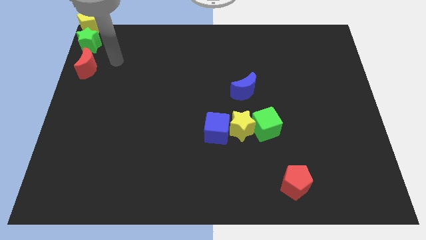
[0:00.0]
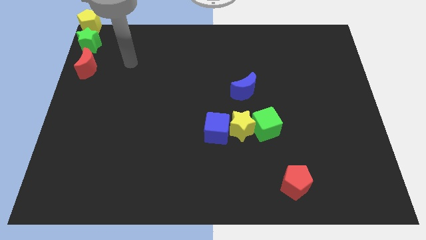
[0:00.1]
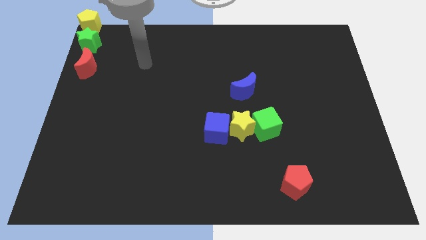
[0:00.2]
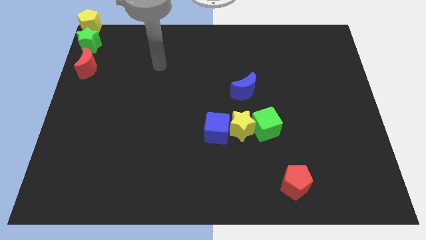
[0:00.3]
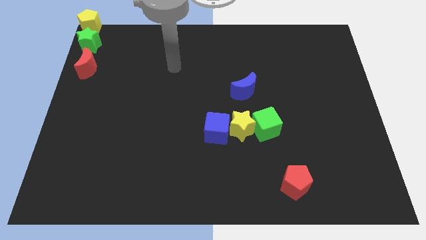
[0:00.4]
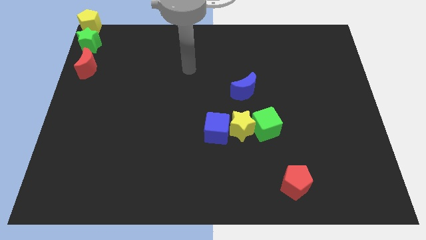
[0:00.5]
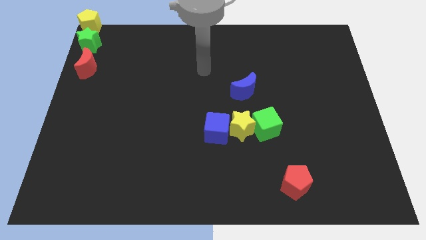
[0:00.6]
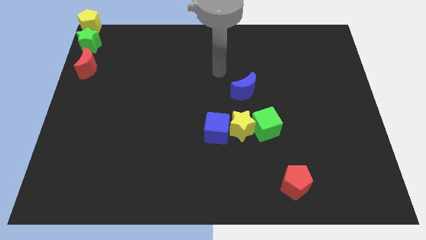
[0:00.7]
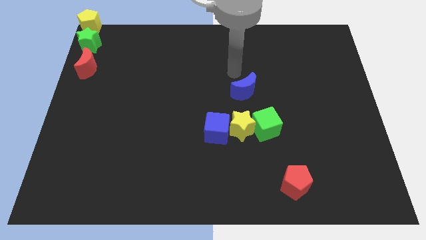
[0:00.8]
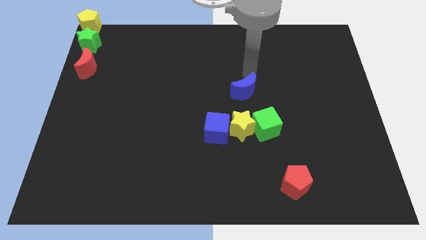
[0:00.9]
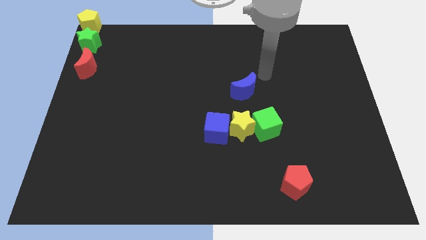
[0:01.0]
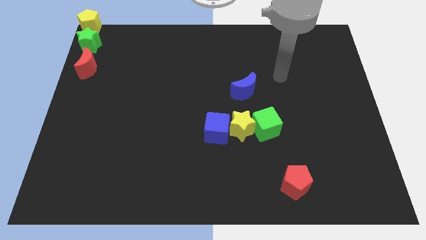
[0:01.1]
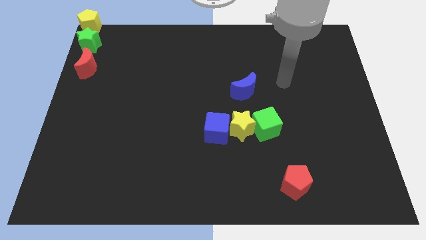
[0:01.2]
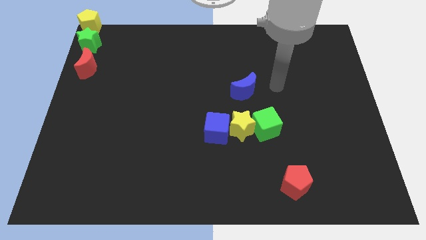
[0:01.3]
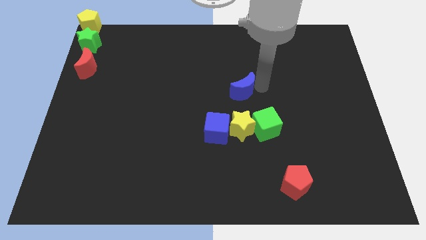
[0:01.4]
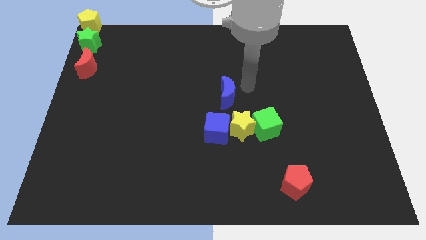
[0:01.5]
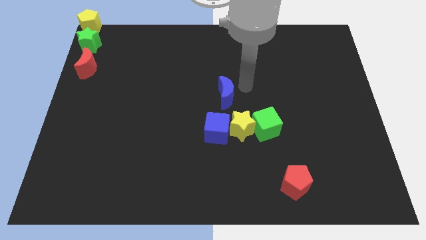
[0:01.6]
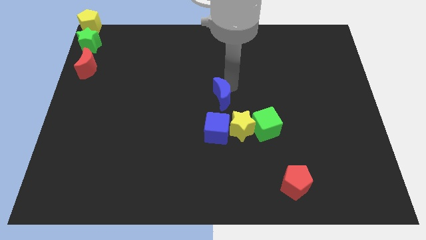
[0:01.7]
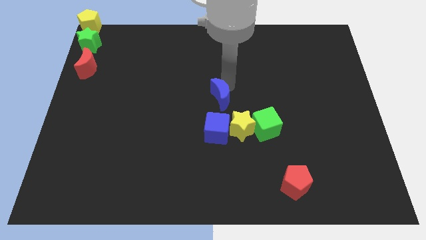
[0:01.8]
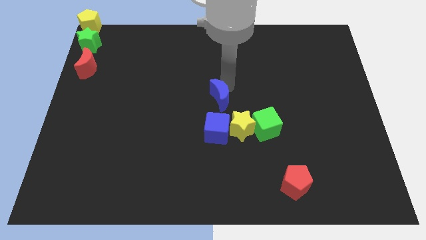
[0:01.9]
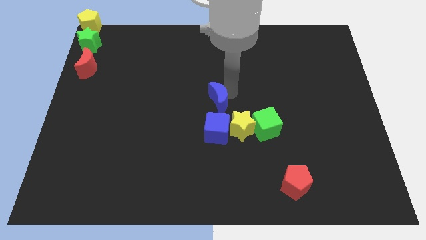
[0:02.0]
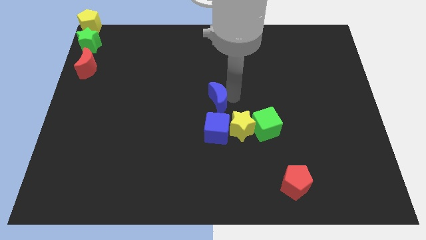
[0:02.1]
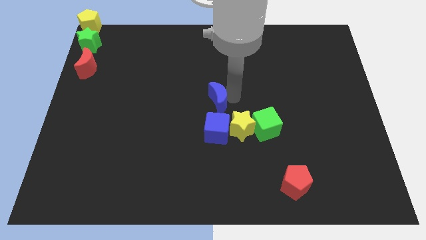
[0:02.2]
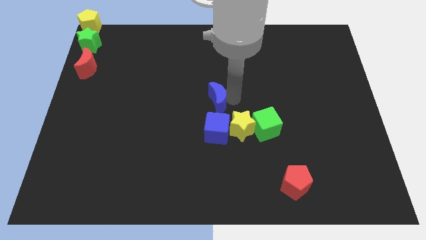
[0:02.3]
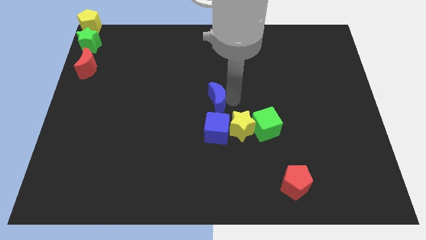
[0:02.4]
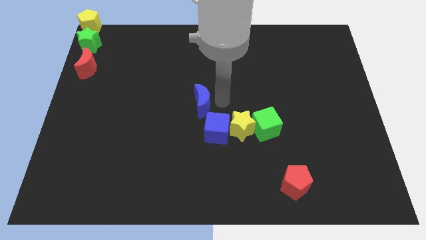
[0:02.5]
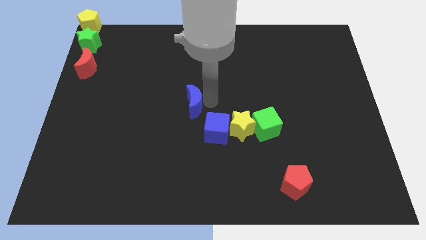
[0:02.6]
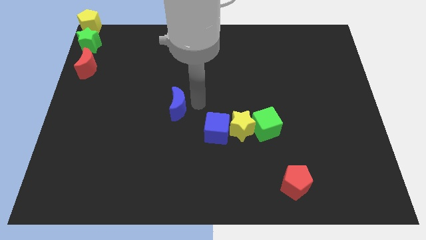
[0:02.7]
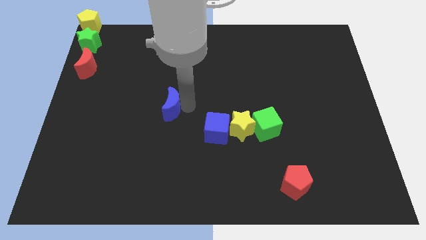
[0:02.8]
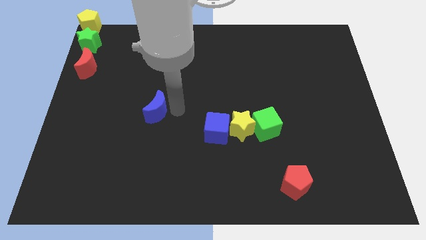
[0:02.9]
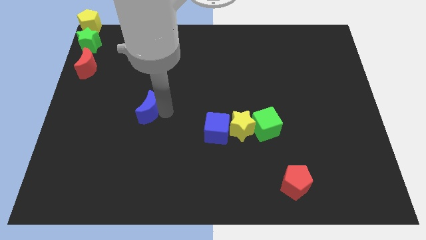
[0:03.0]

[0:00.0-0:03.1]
move the blue crescent to the left side of the board

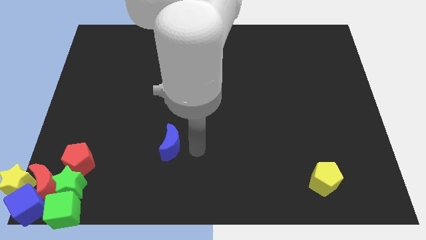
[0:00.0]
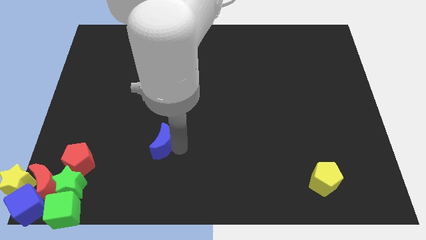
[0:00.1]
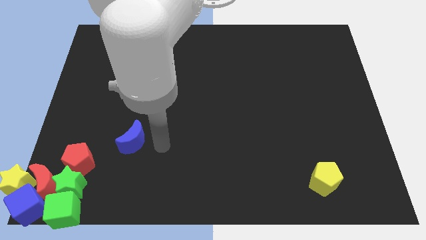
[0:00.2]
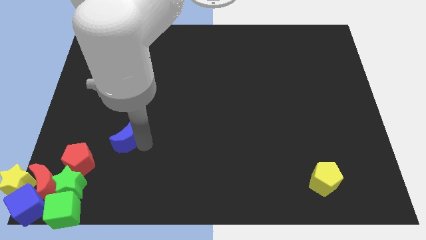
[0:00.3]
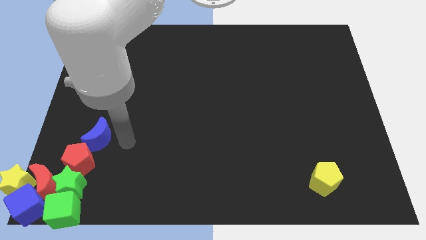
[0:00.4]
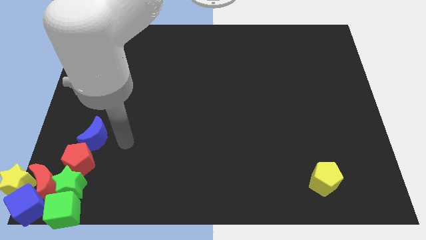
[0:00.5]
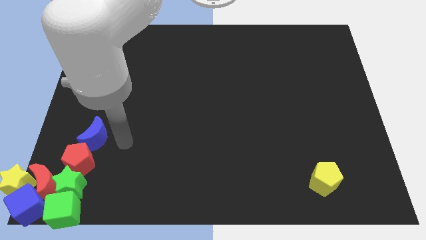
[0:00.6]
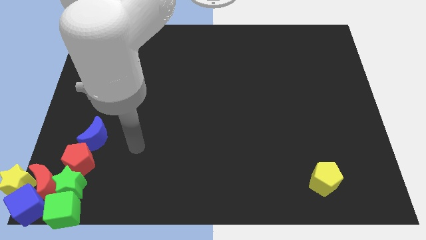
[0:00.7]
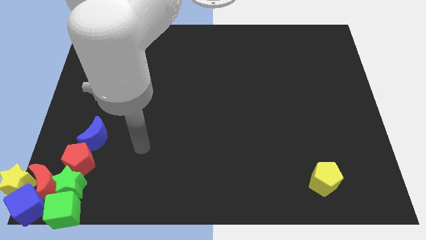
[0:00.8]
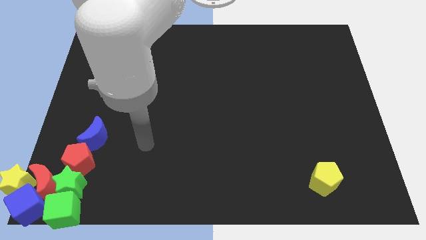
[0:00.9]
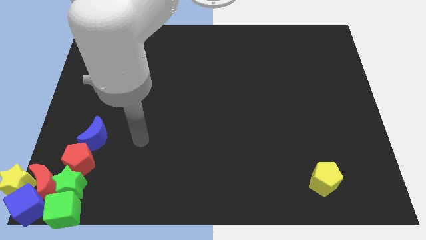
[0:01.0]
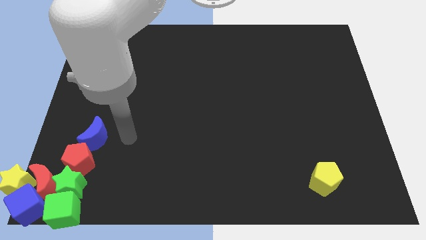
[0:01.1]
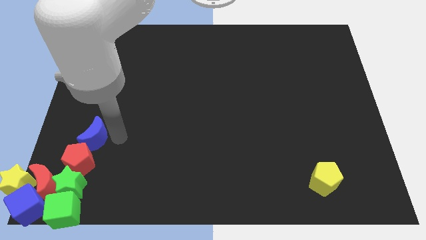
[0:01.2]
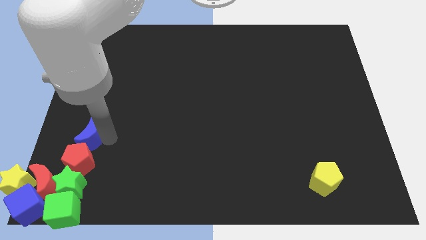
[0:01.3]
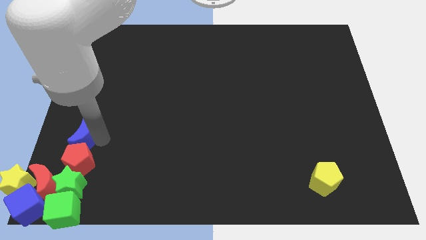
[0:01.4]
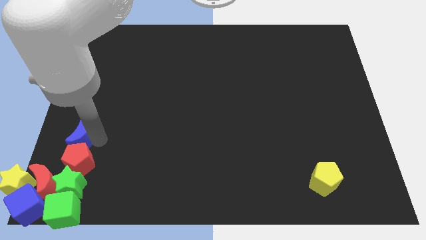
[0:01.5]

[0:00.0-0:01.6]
place the blue crescent to the top of the red pentagon

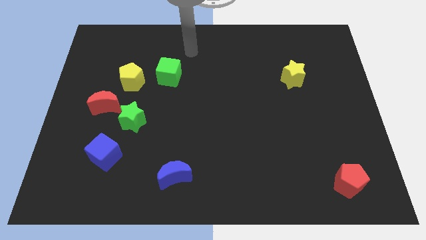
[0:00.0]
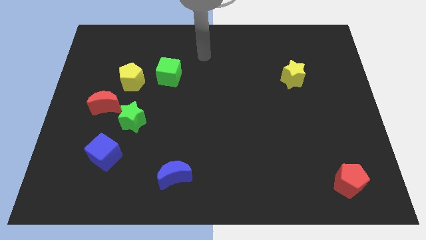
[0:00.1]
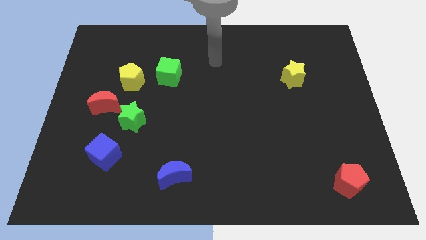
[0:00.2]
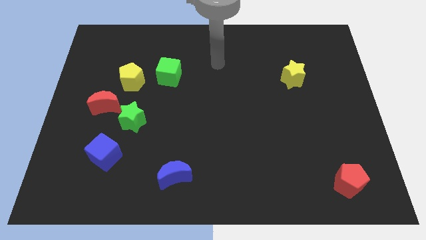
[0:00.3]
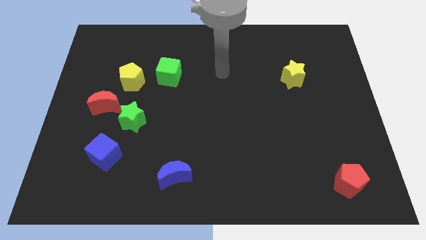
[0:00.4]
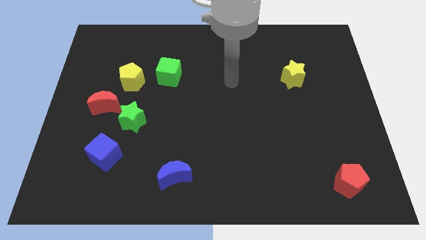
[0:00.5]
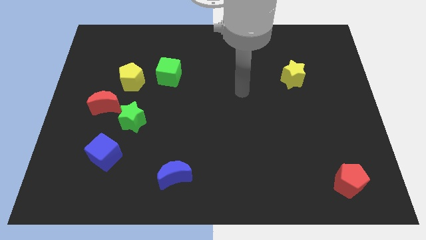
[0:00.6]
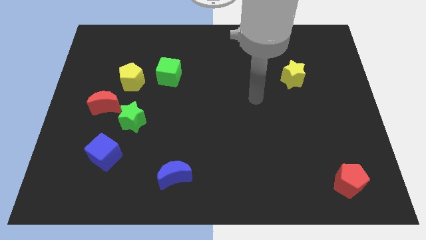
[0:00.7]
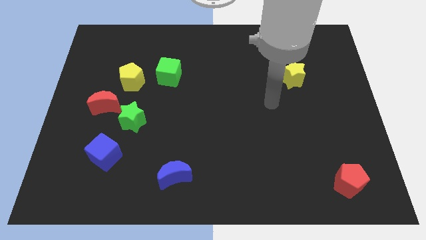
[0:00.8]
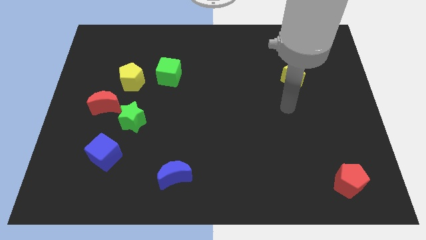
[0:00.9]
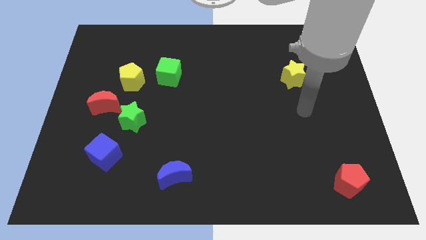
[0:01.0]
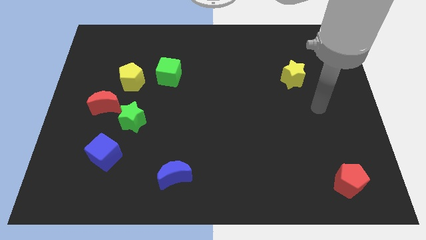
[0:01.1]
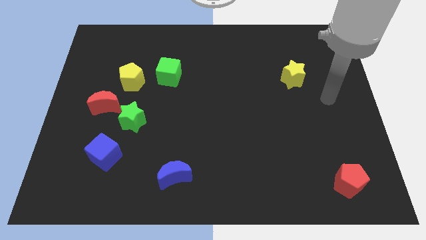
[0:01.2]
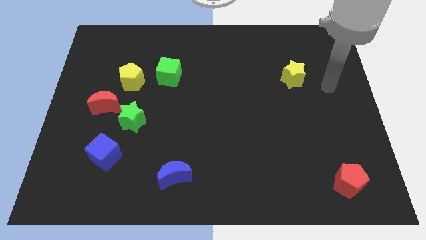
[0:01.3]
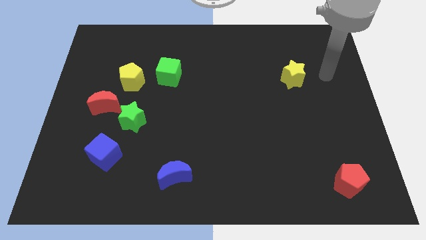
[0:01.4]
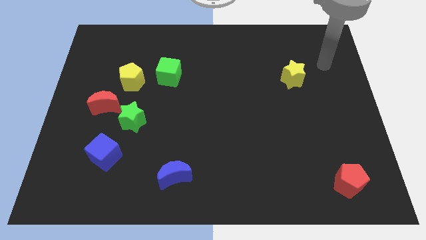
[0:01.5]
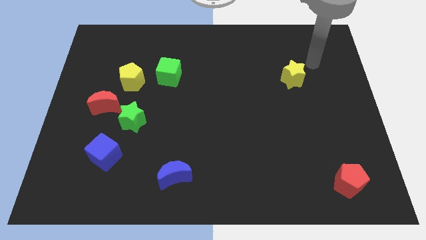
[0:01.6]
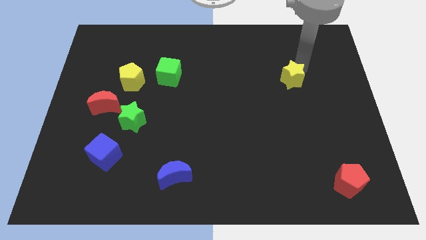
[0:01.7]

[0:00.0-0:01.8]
move your arm towards the yellow star

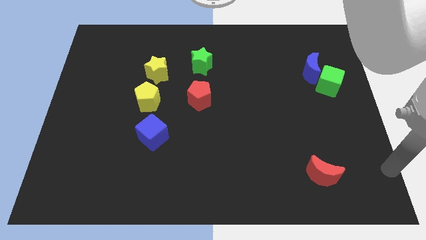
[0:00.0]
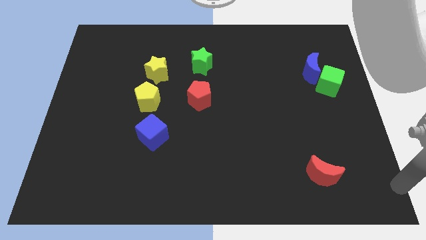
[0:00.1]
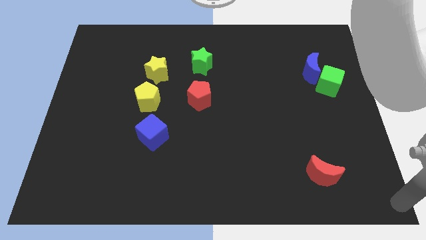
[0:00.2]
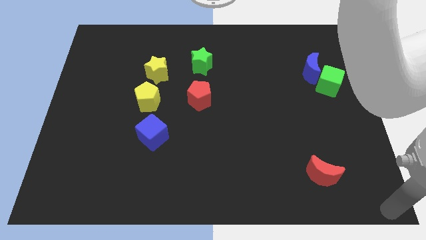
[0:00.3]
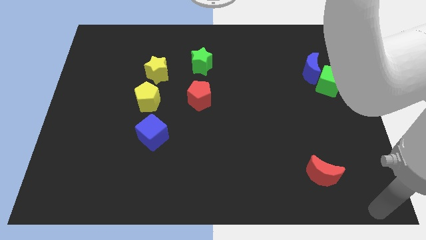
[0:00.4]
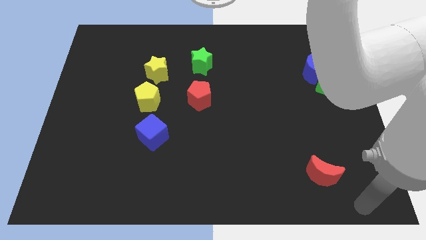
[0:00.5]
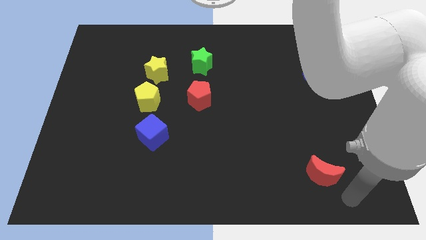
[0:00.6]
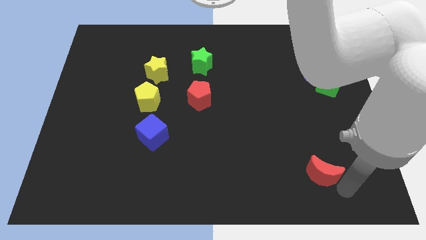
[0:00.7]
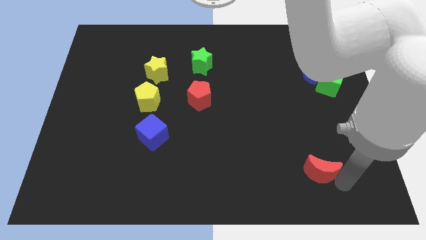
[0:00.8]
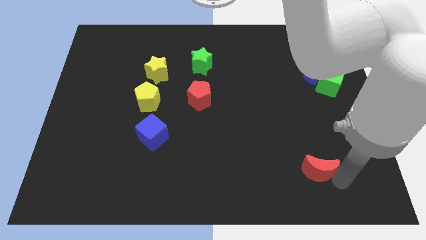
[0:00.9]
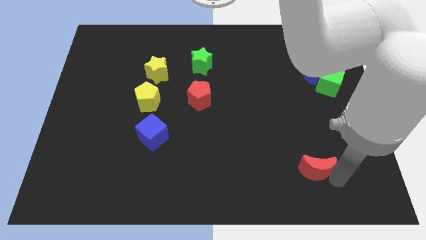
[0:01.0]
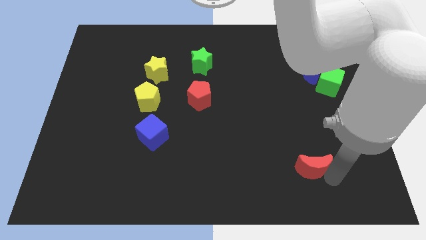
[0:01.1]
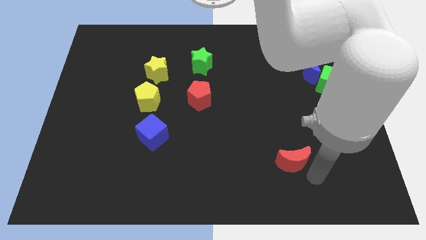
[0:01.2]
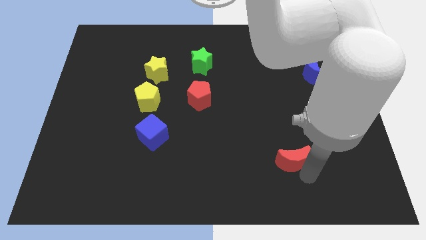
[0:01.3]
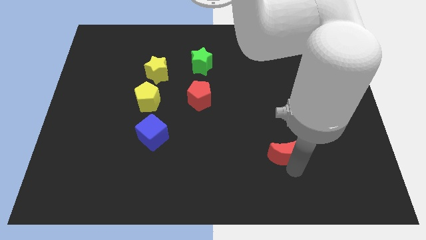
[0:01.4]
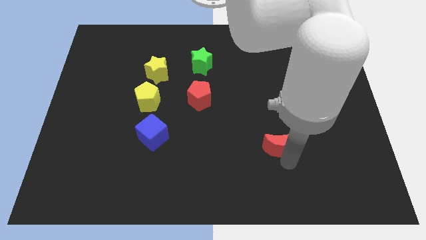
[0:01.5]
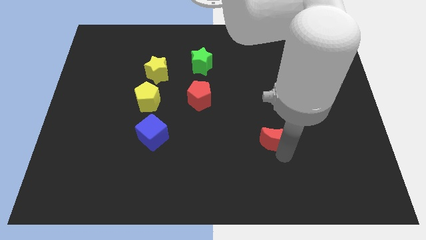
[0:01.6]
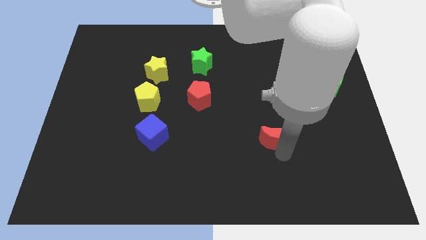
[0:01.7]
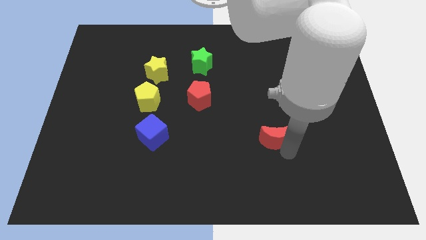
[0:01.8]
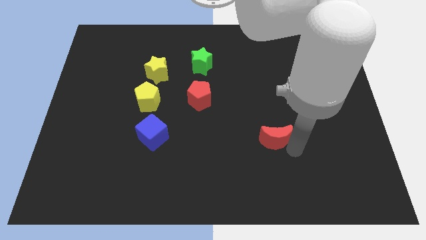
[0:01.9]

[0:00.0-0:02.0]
move the red moon towards the top side

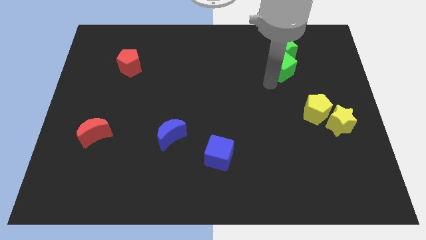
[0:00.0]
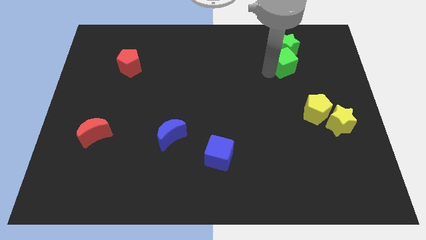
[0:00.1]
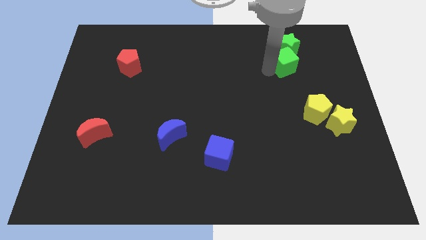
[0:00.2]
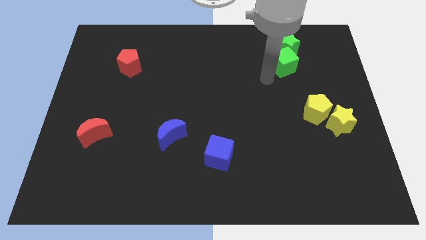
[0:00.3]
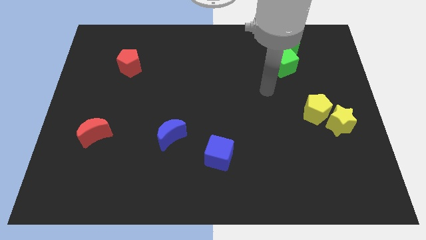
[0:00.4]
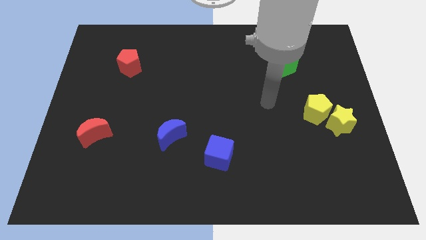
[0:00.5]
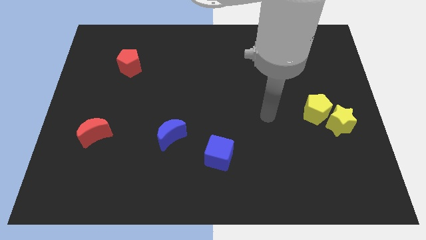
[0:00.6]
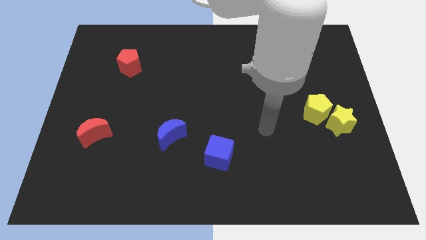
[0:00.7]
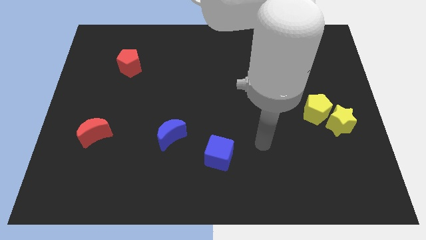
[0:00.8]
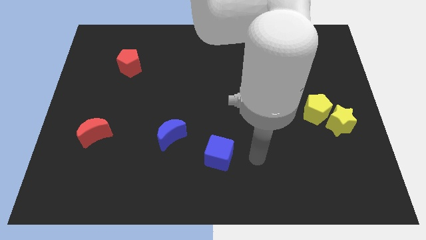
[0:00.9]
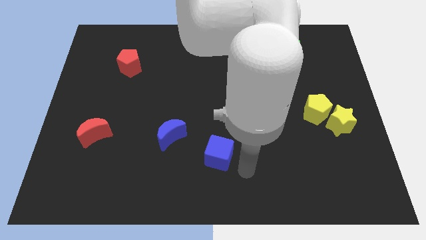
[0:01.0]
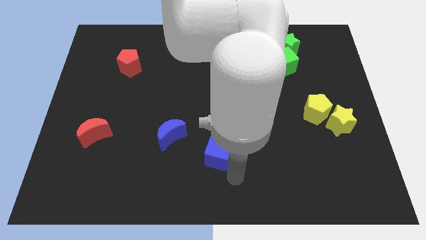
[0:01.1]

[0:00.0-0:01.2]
place your arm below blue cube
